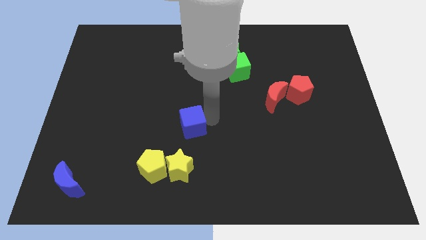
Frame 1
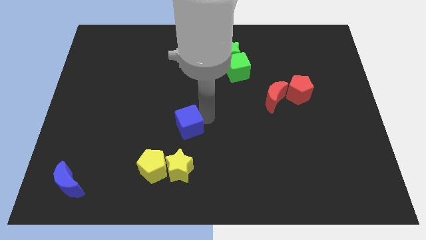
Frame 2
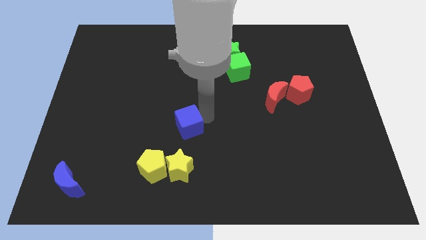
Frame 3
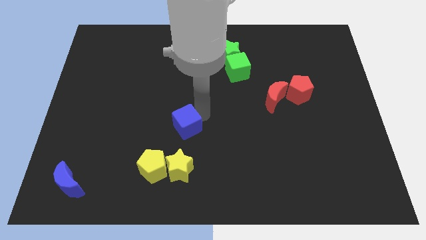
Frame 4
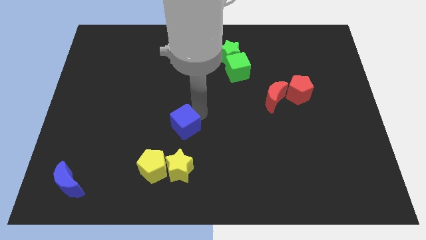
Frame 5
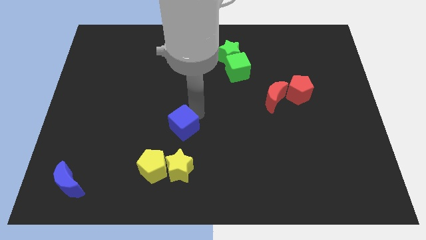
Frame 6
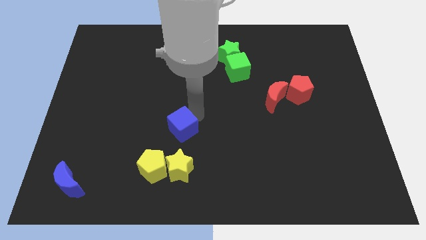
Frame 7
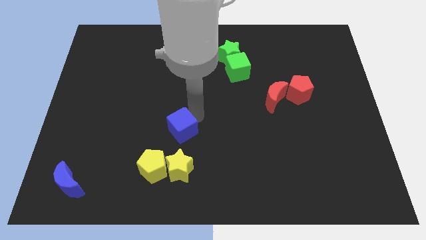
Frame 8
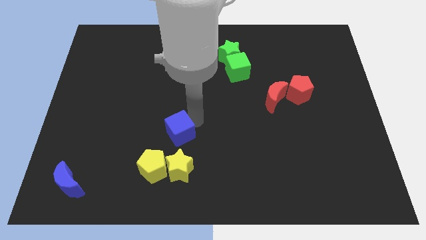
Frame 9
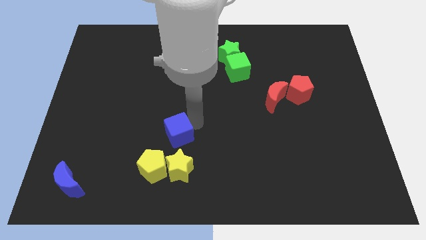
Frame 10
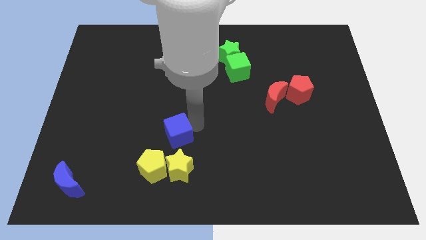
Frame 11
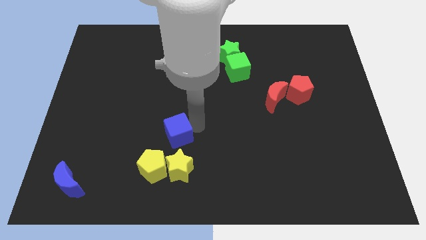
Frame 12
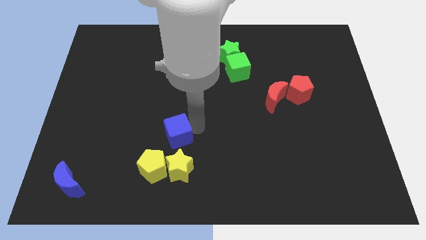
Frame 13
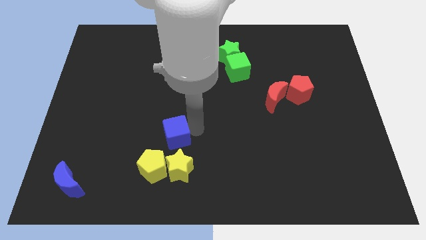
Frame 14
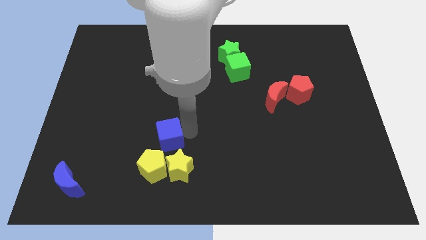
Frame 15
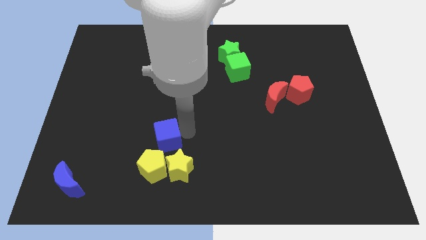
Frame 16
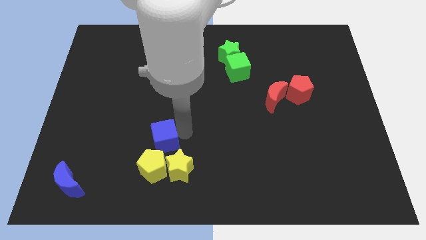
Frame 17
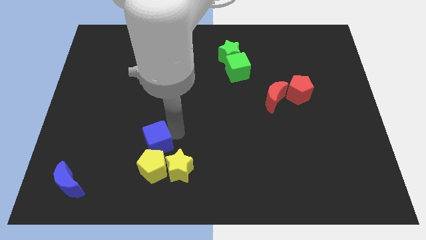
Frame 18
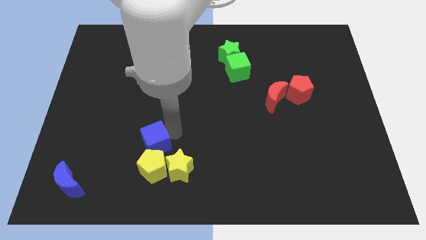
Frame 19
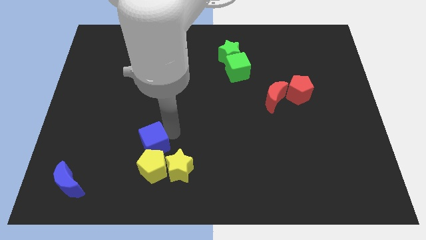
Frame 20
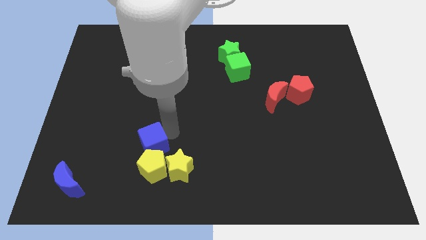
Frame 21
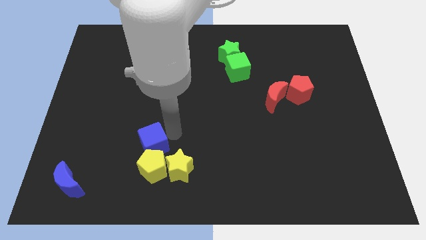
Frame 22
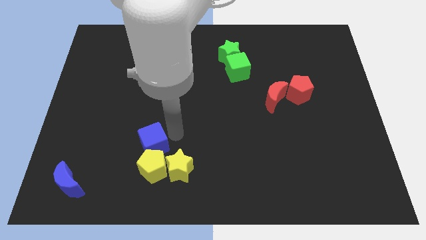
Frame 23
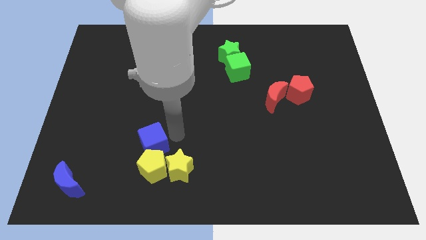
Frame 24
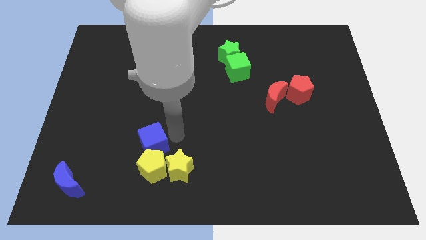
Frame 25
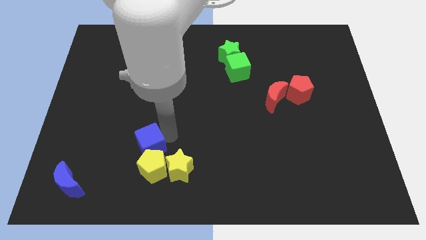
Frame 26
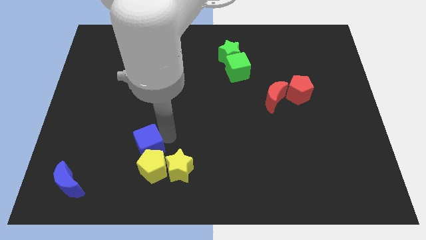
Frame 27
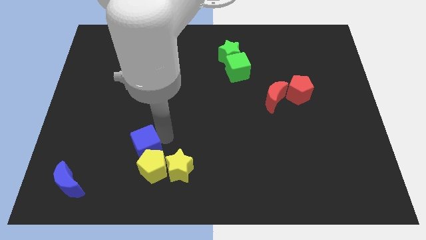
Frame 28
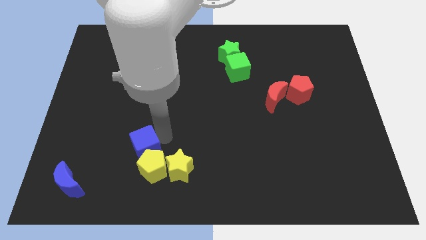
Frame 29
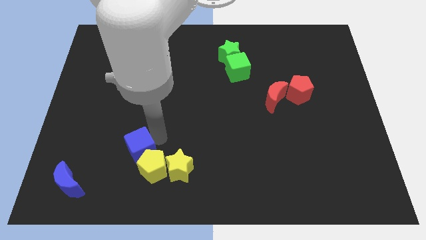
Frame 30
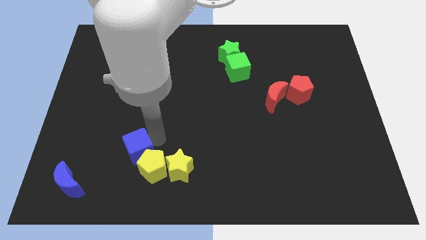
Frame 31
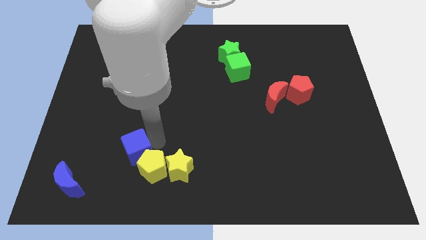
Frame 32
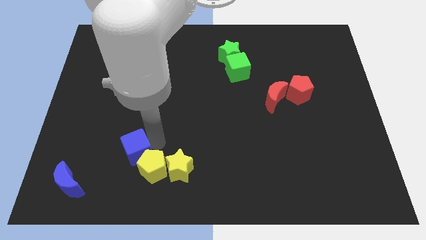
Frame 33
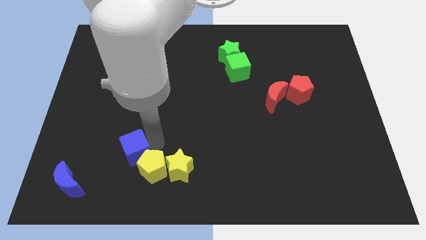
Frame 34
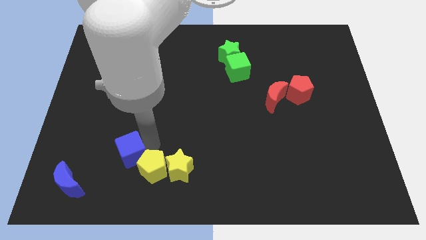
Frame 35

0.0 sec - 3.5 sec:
move the blue cube towards the blue crescent

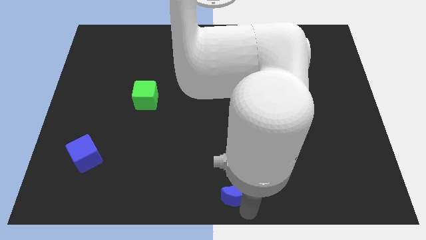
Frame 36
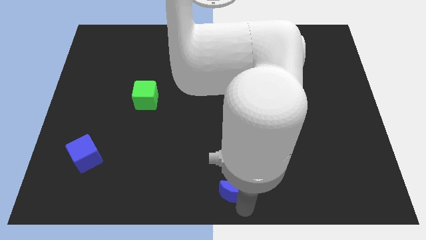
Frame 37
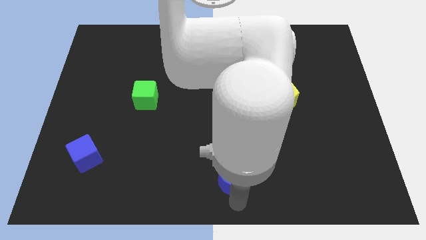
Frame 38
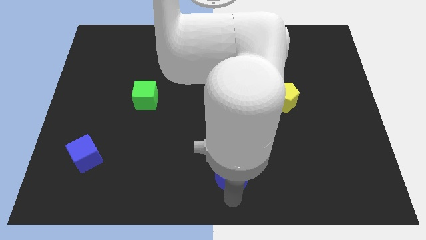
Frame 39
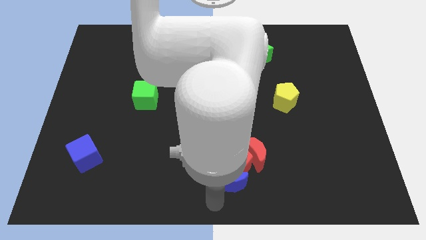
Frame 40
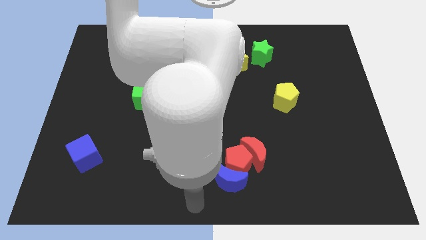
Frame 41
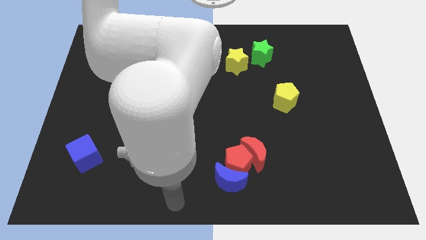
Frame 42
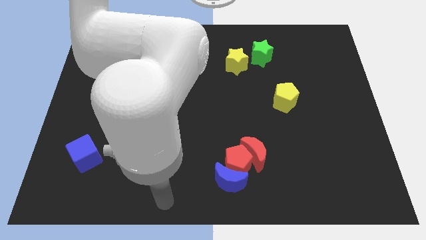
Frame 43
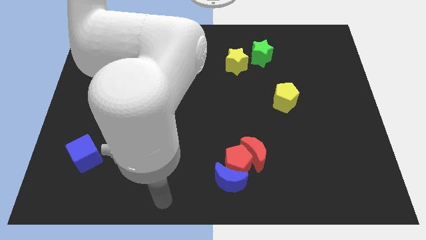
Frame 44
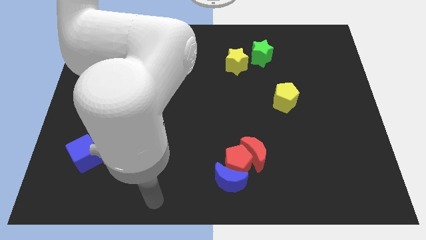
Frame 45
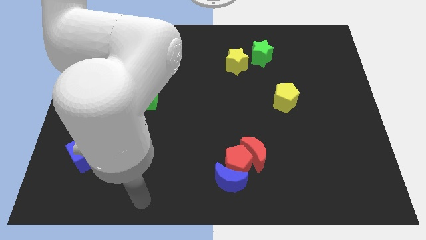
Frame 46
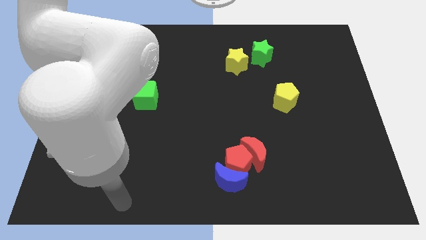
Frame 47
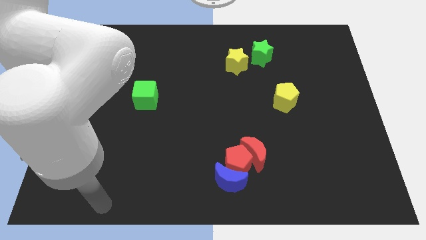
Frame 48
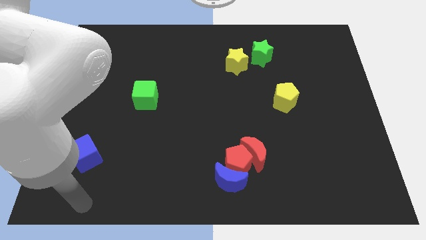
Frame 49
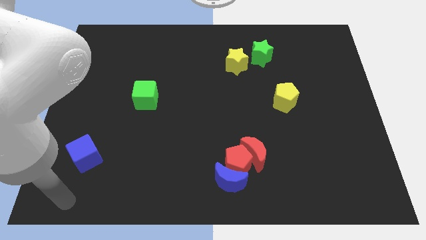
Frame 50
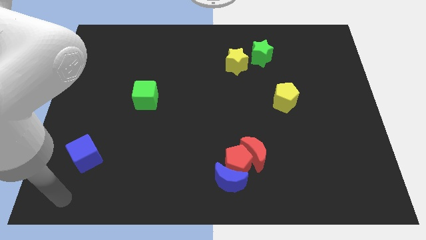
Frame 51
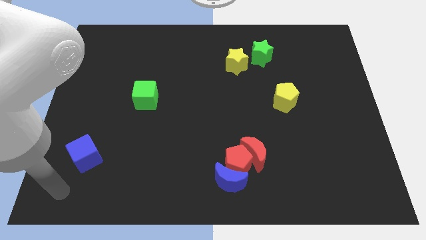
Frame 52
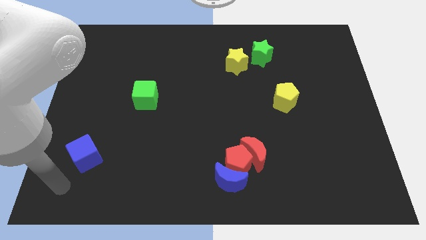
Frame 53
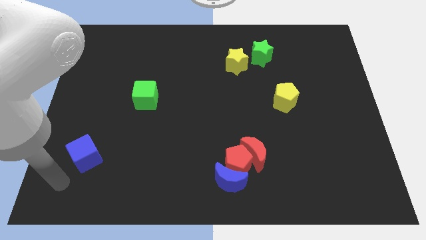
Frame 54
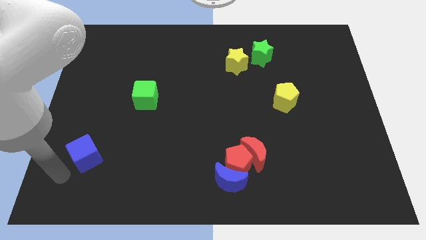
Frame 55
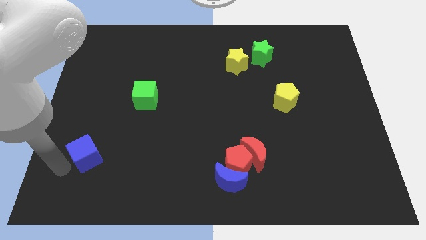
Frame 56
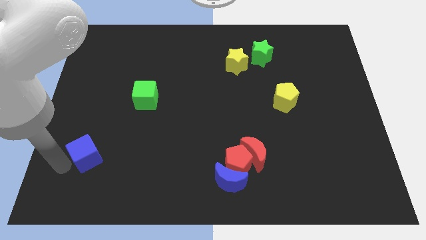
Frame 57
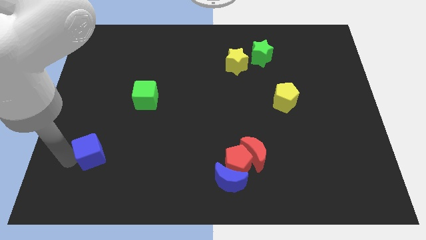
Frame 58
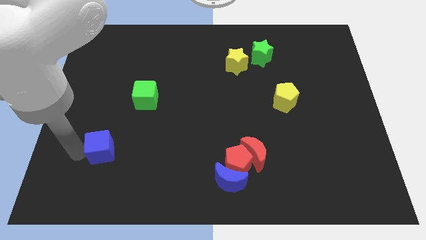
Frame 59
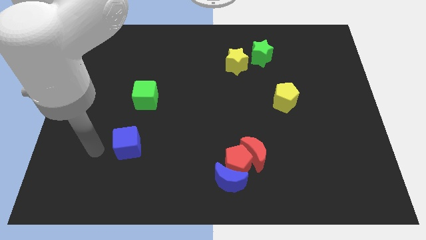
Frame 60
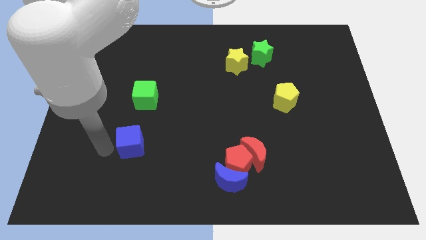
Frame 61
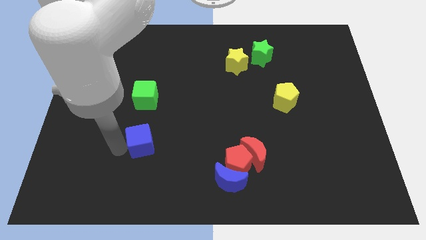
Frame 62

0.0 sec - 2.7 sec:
push the blue cube below to the green cube

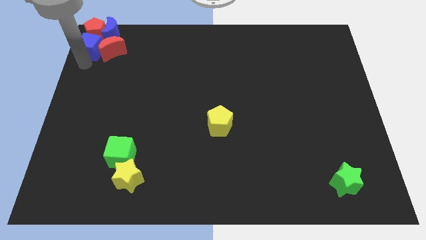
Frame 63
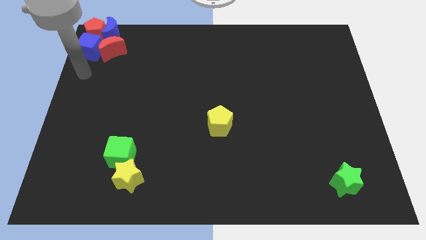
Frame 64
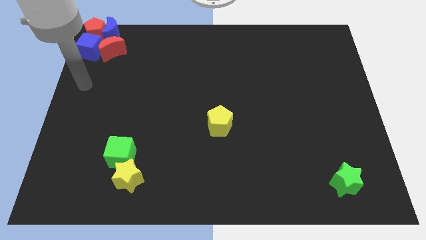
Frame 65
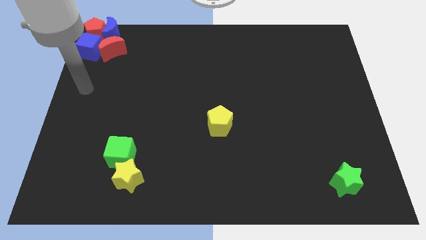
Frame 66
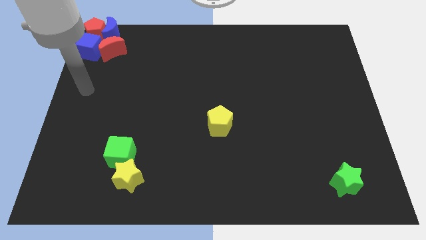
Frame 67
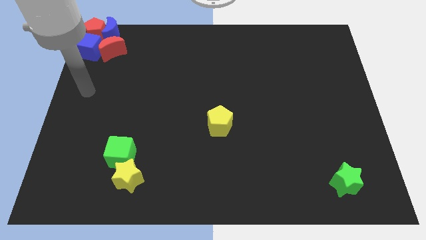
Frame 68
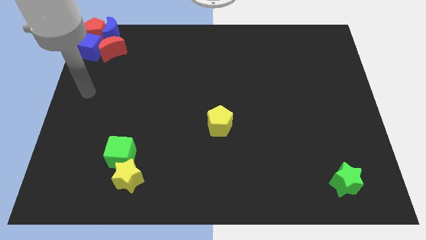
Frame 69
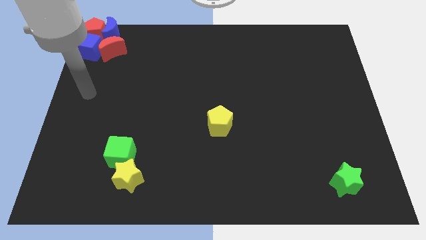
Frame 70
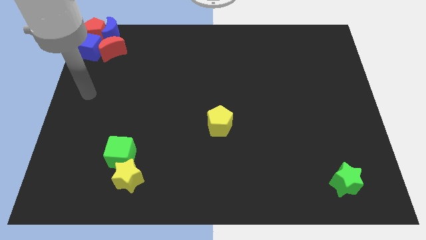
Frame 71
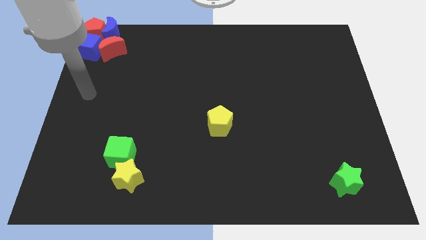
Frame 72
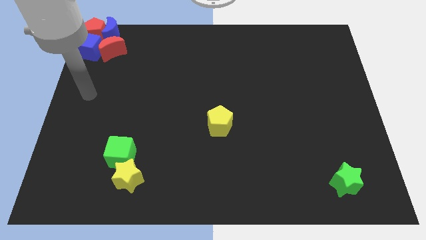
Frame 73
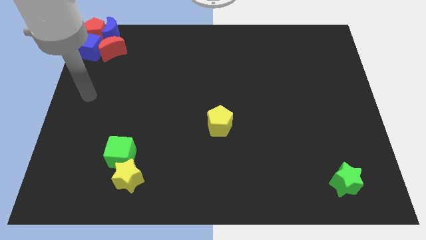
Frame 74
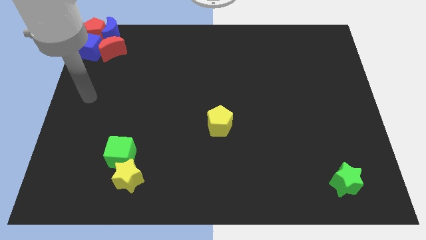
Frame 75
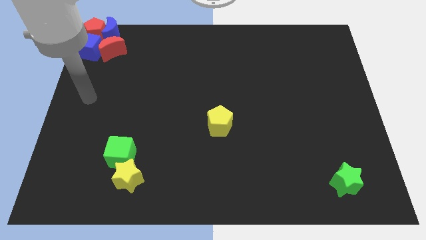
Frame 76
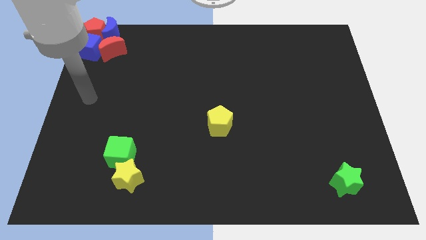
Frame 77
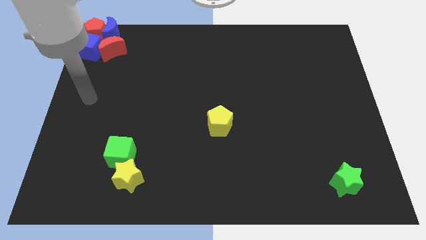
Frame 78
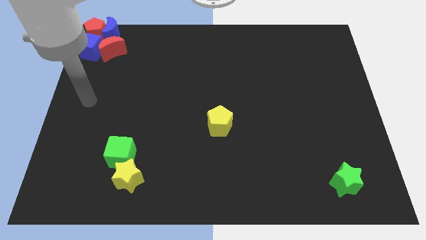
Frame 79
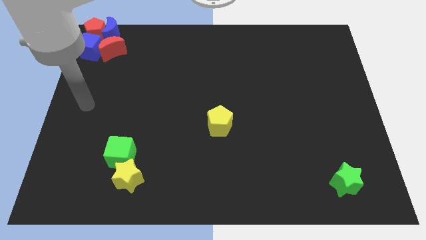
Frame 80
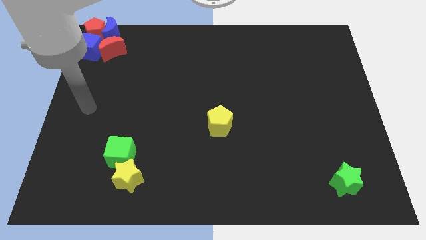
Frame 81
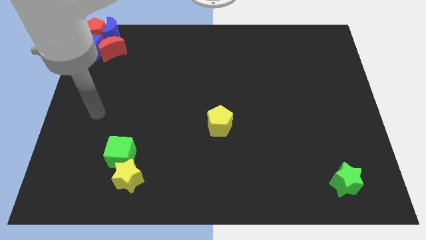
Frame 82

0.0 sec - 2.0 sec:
move your arm away from the blue cube

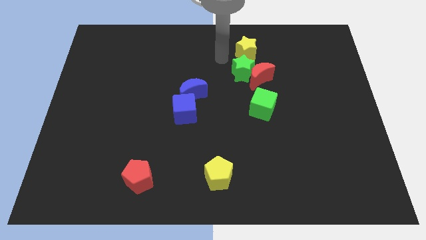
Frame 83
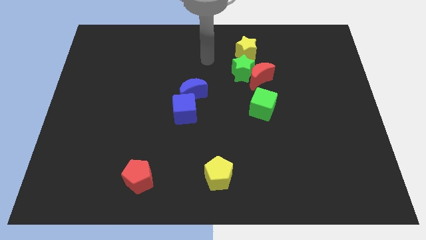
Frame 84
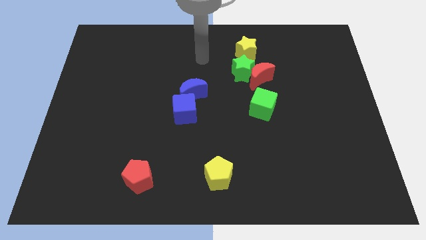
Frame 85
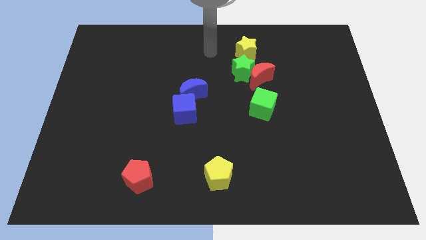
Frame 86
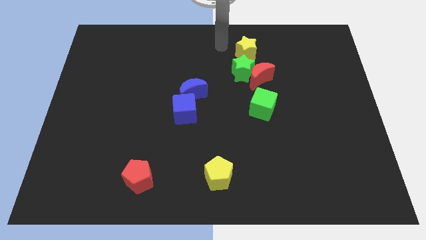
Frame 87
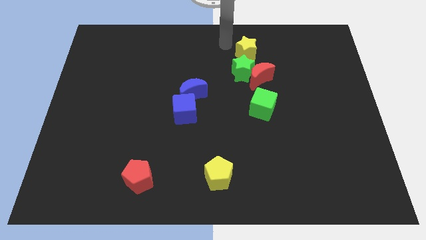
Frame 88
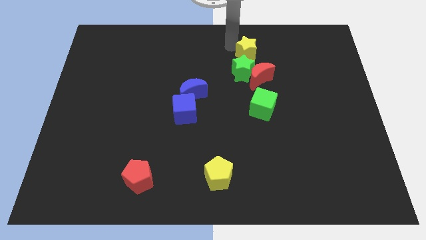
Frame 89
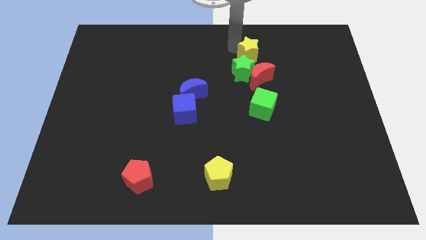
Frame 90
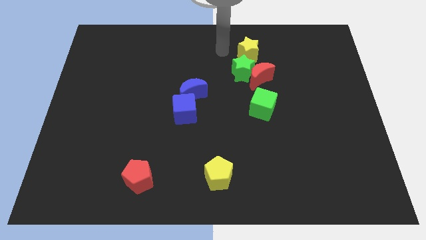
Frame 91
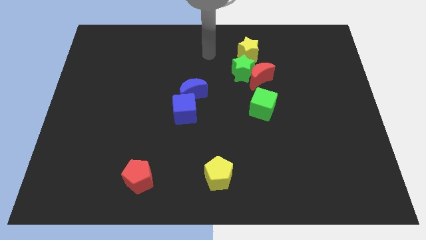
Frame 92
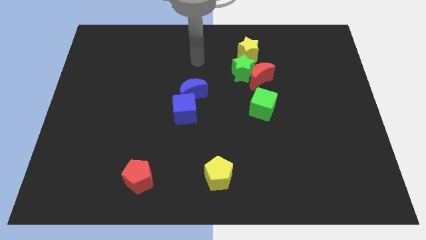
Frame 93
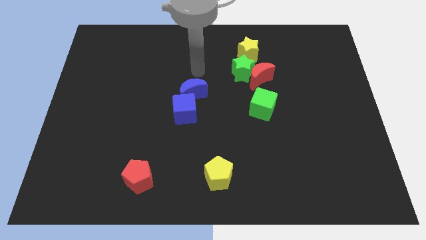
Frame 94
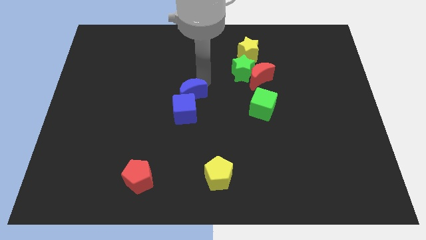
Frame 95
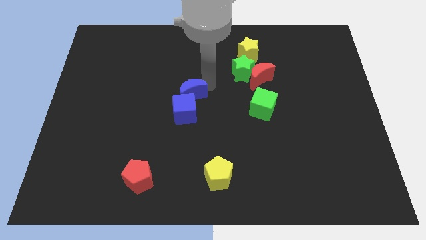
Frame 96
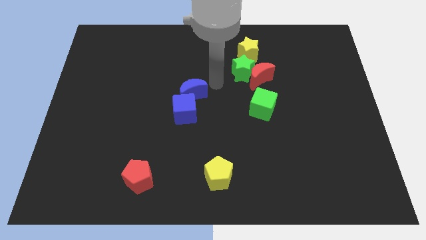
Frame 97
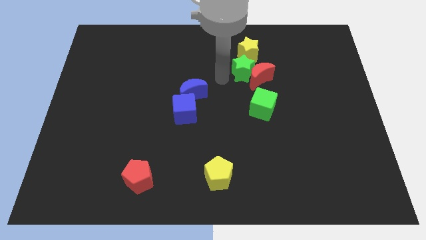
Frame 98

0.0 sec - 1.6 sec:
push the yellow star to the top of the green star
